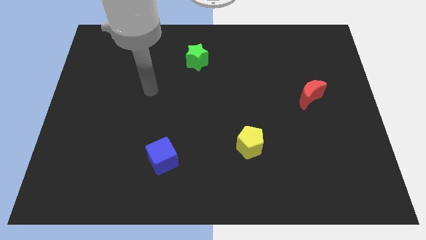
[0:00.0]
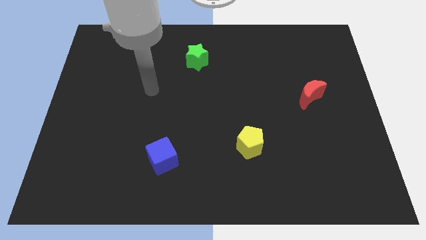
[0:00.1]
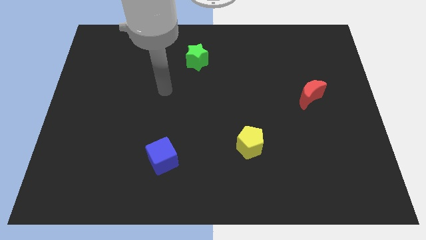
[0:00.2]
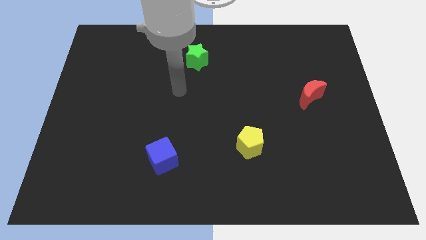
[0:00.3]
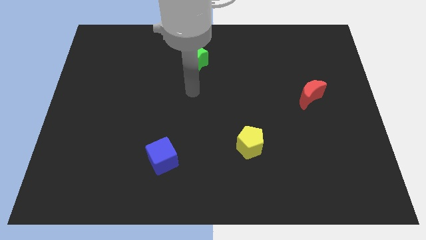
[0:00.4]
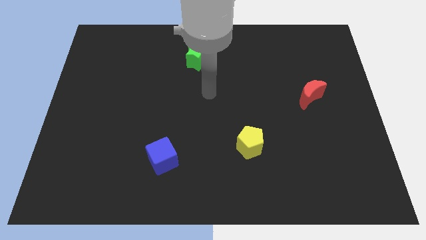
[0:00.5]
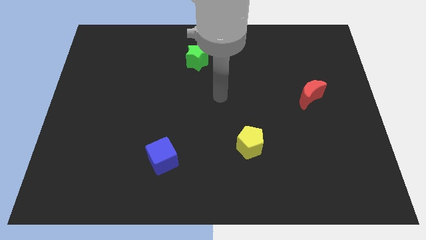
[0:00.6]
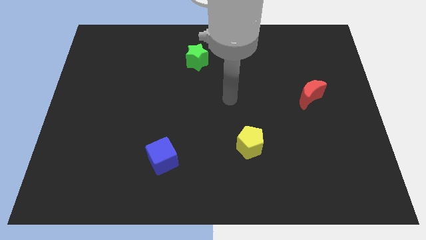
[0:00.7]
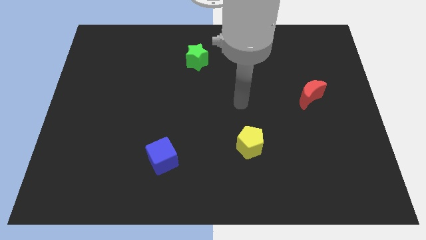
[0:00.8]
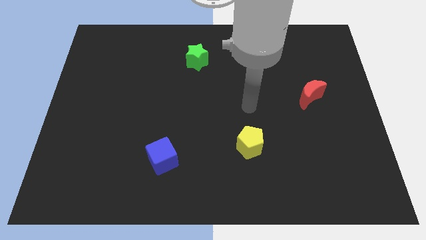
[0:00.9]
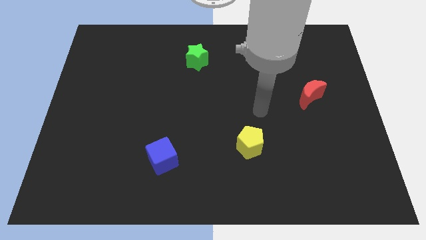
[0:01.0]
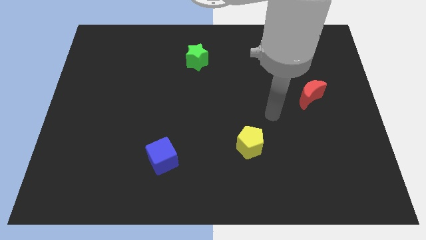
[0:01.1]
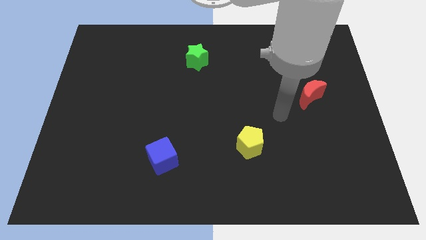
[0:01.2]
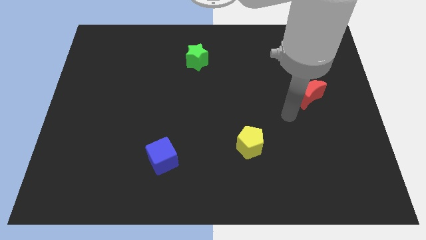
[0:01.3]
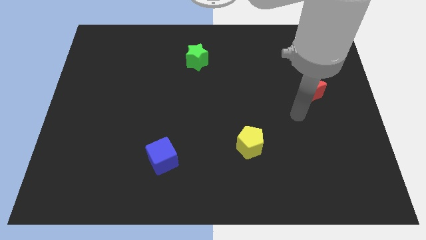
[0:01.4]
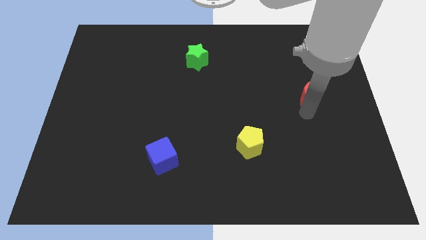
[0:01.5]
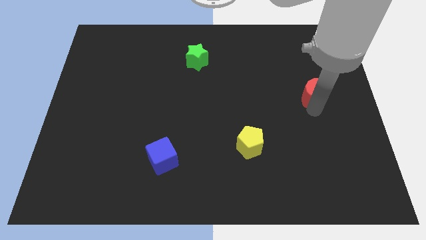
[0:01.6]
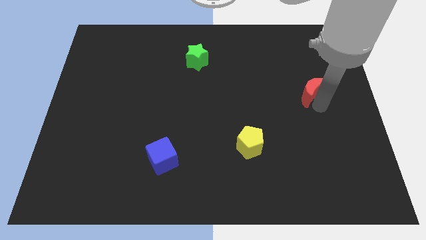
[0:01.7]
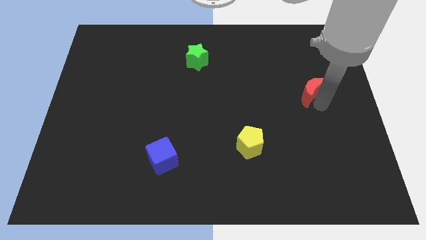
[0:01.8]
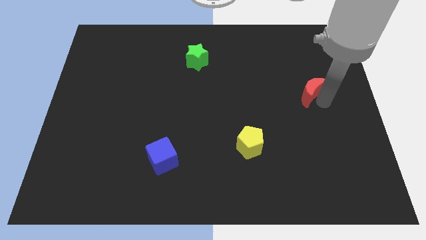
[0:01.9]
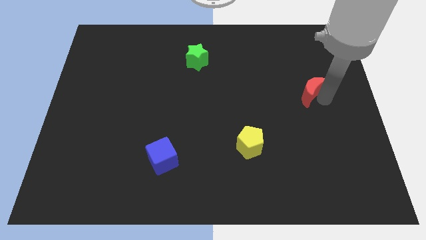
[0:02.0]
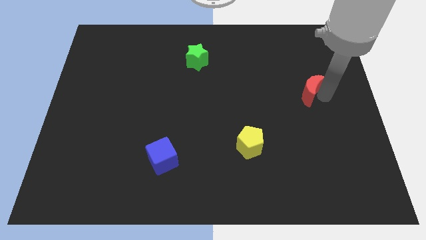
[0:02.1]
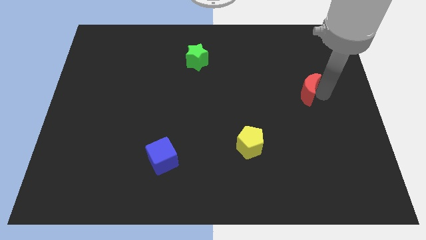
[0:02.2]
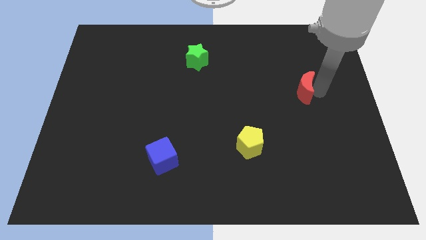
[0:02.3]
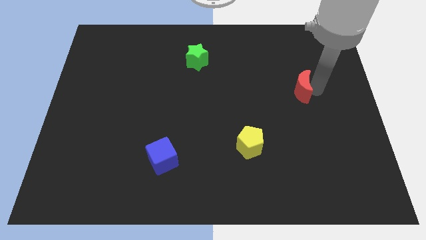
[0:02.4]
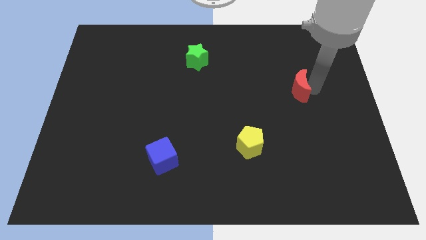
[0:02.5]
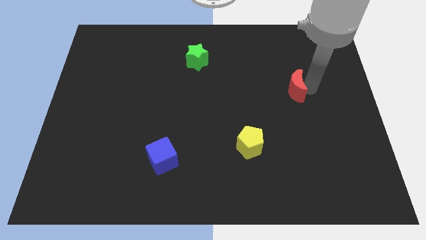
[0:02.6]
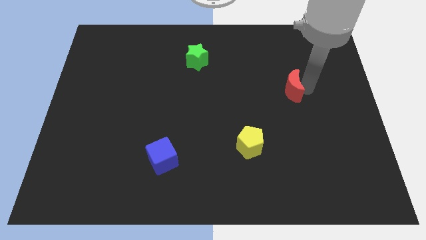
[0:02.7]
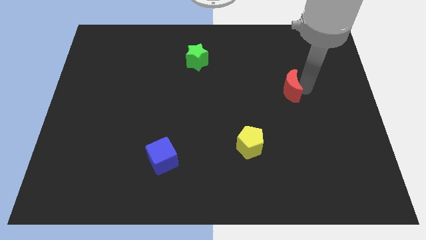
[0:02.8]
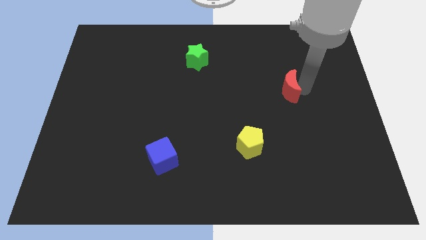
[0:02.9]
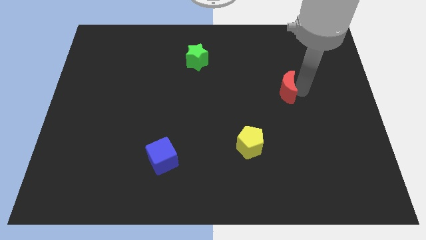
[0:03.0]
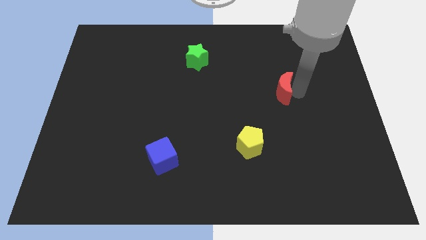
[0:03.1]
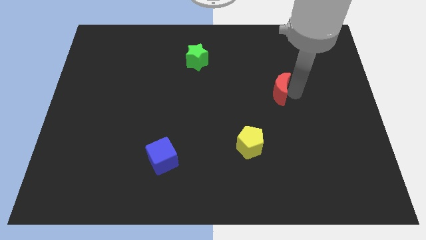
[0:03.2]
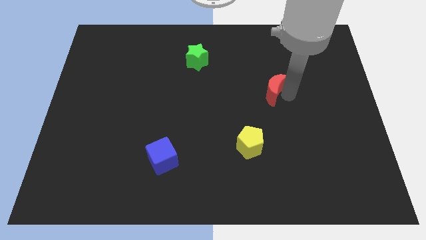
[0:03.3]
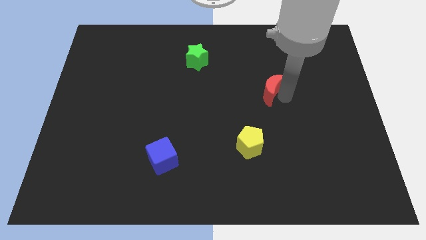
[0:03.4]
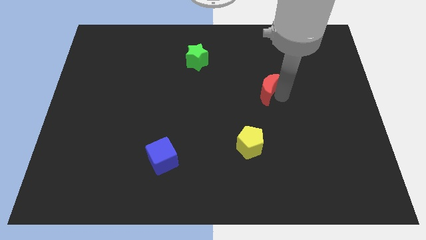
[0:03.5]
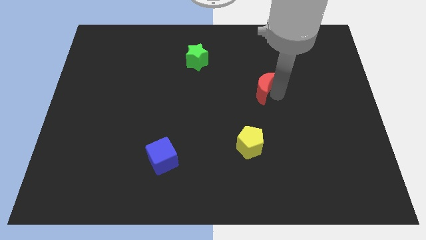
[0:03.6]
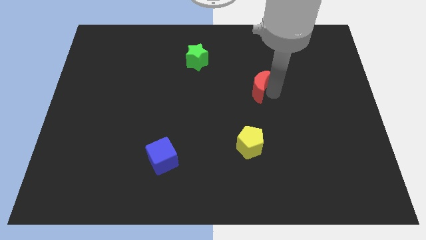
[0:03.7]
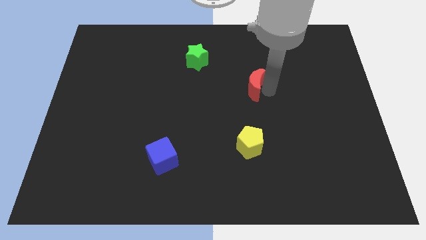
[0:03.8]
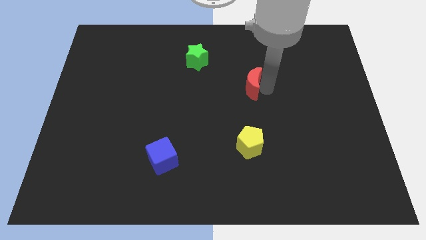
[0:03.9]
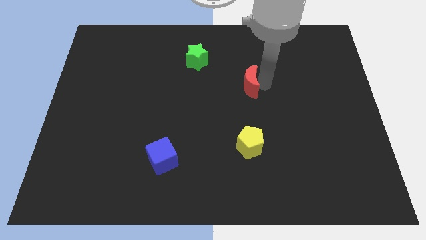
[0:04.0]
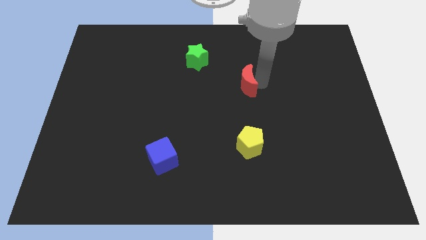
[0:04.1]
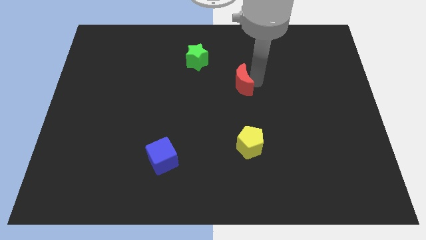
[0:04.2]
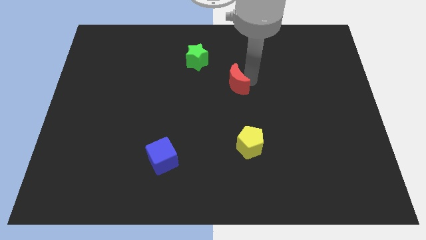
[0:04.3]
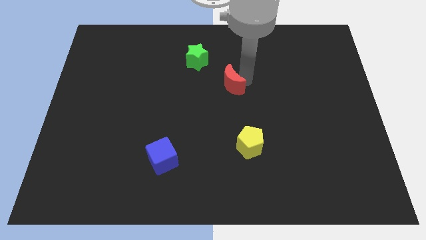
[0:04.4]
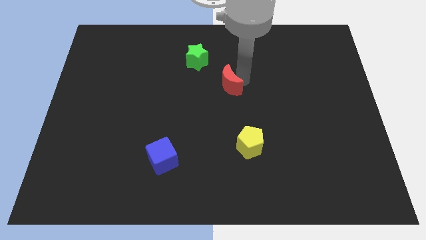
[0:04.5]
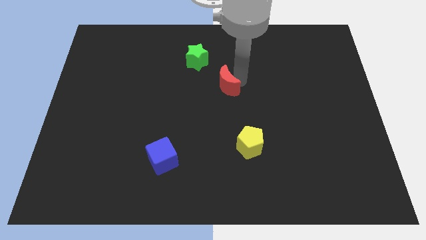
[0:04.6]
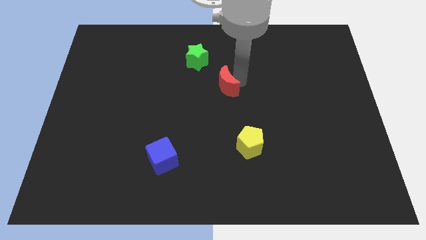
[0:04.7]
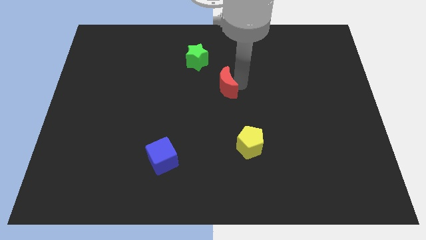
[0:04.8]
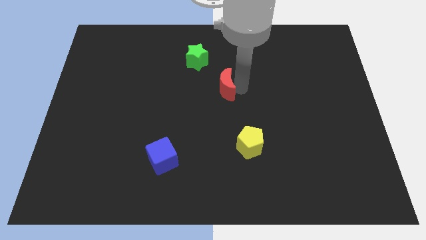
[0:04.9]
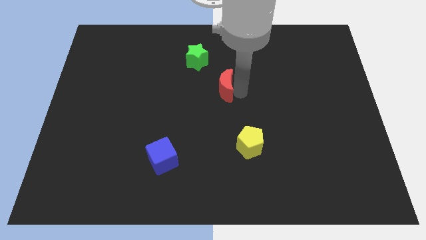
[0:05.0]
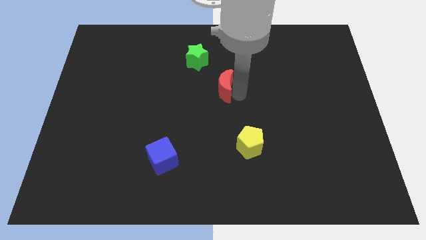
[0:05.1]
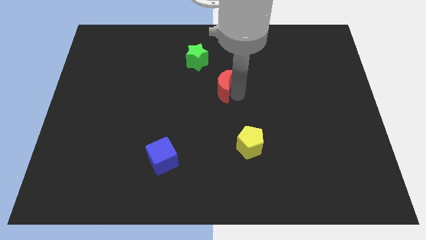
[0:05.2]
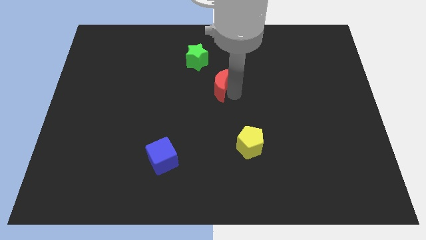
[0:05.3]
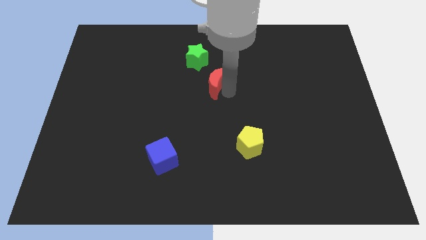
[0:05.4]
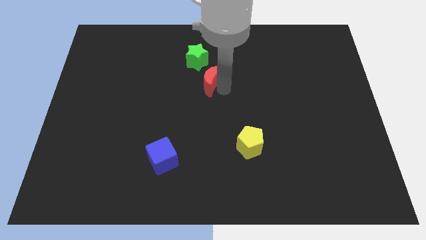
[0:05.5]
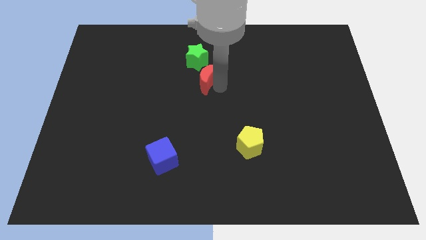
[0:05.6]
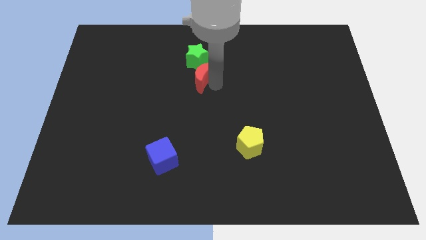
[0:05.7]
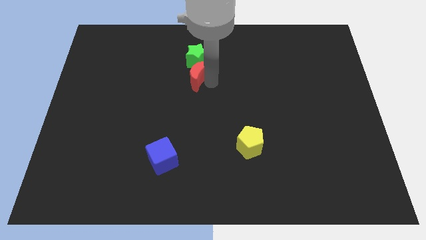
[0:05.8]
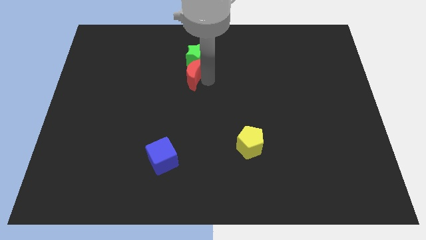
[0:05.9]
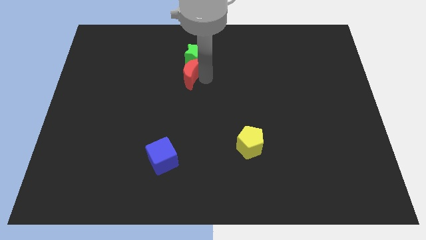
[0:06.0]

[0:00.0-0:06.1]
push the red moon towards the green block

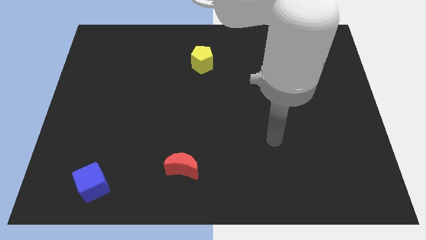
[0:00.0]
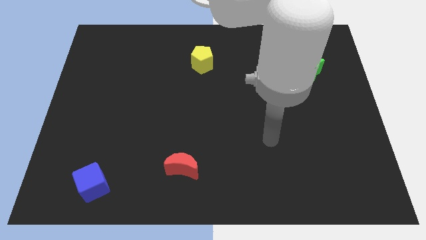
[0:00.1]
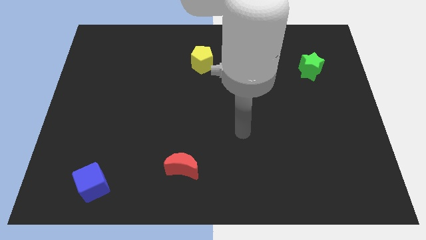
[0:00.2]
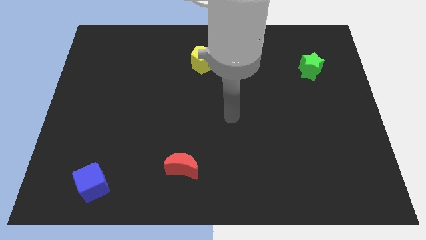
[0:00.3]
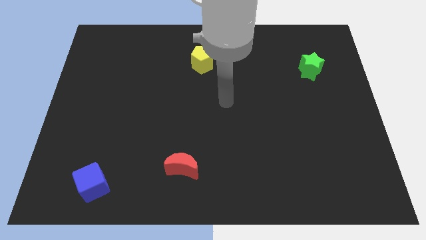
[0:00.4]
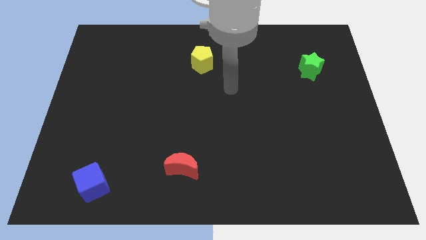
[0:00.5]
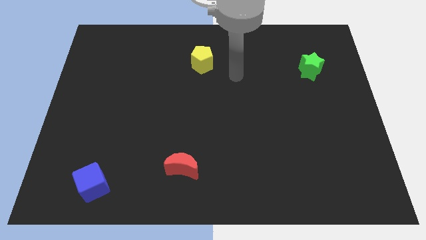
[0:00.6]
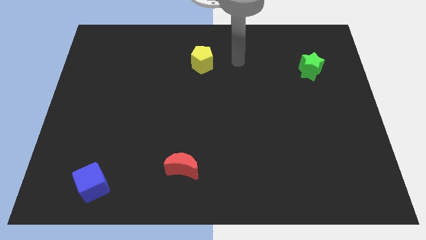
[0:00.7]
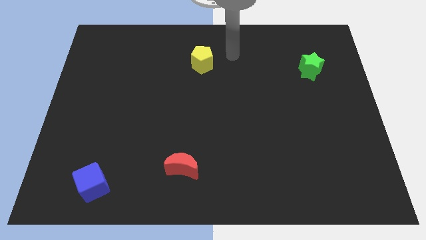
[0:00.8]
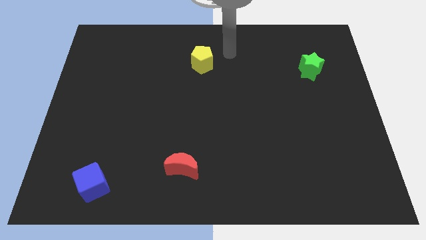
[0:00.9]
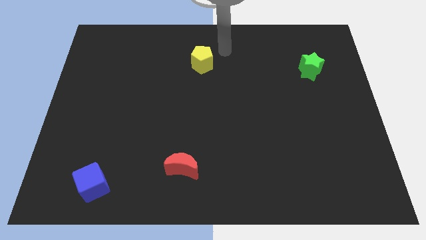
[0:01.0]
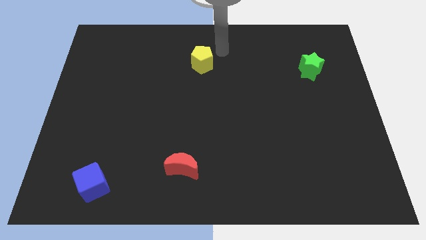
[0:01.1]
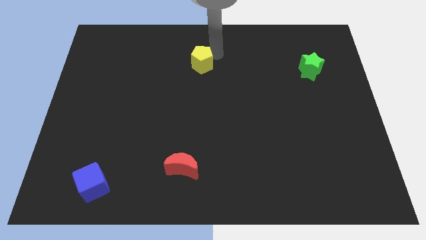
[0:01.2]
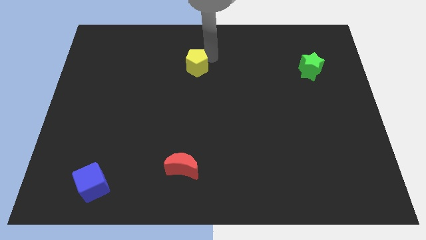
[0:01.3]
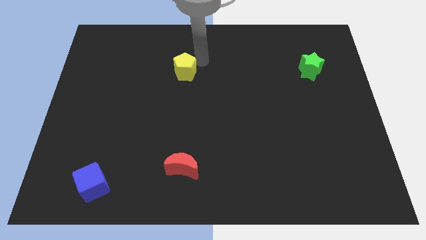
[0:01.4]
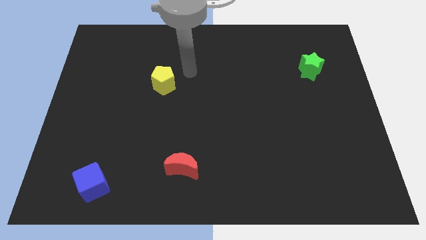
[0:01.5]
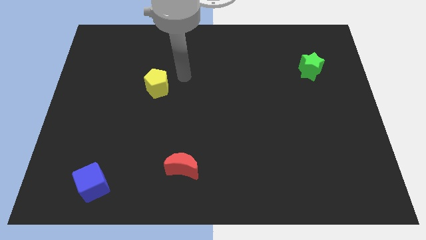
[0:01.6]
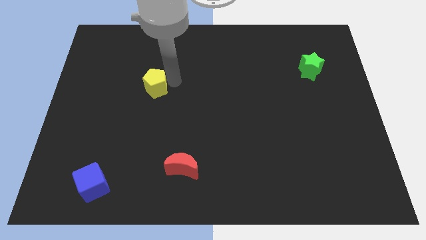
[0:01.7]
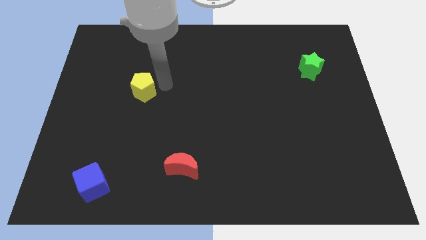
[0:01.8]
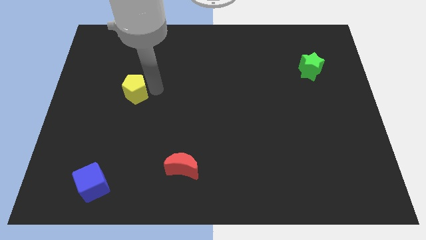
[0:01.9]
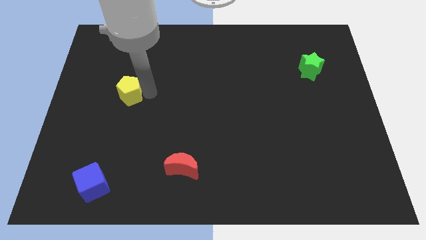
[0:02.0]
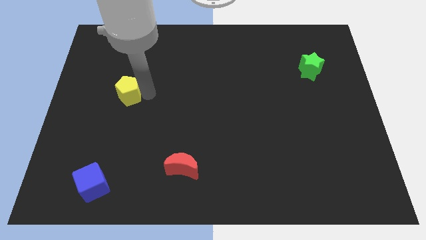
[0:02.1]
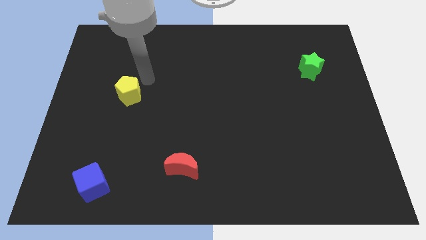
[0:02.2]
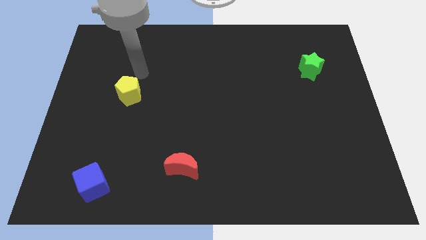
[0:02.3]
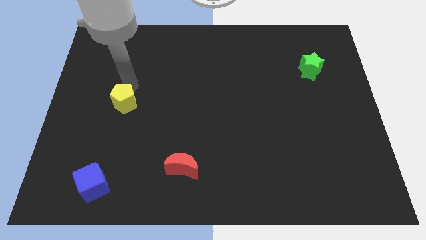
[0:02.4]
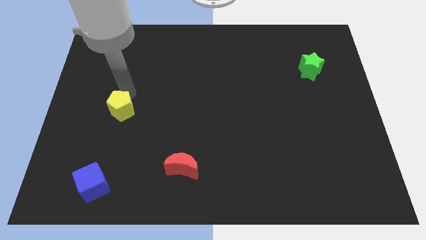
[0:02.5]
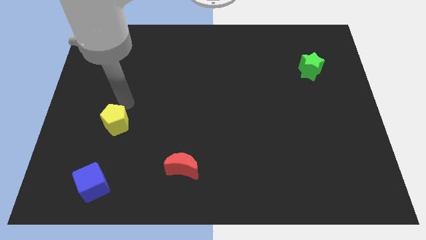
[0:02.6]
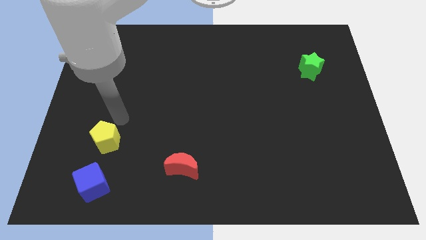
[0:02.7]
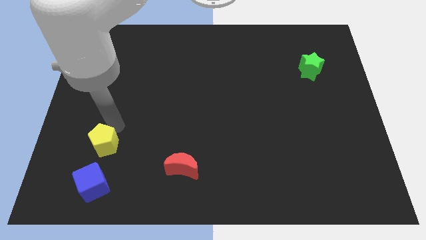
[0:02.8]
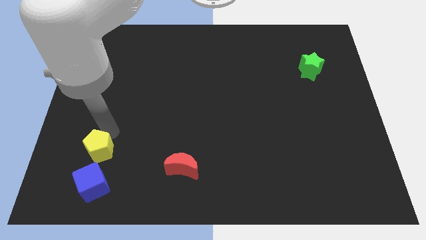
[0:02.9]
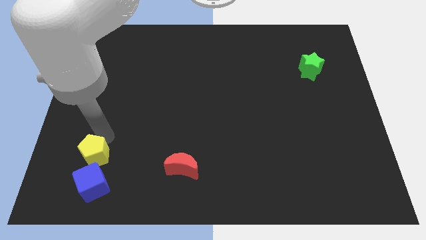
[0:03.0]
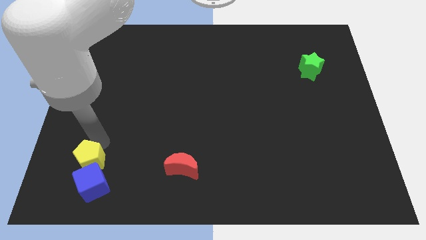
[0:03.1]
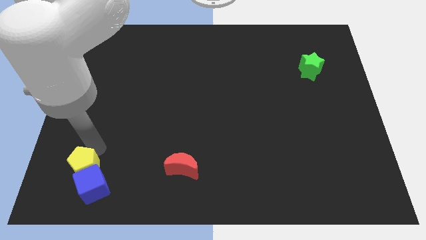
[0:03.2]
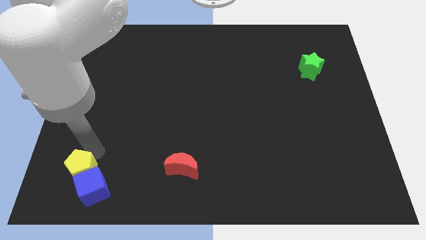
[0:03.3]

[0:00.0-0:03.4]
push the yellow block close to the cube
